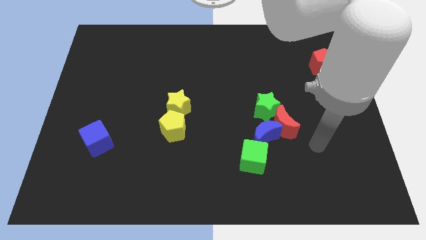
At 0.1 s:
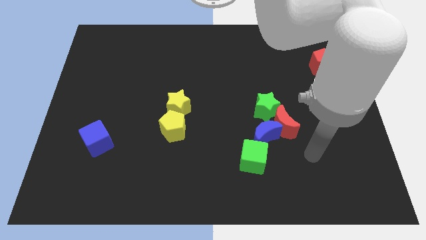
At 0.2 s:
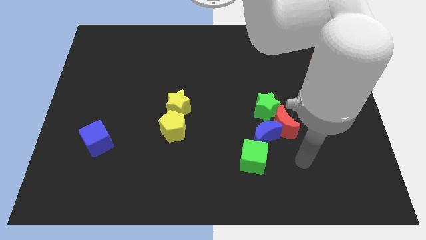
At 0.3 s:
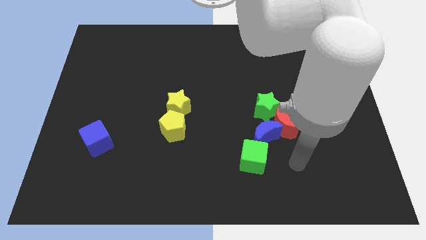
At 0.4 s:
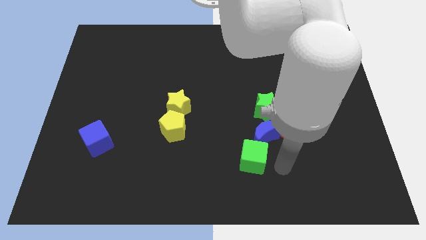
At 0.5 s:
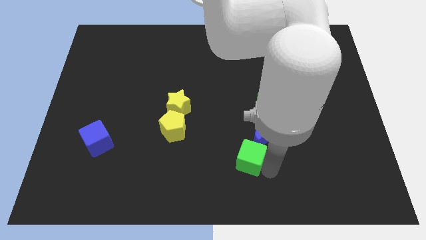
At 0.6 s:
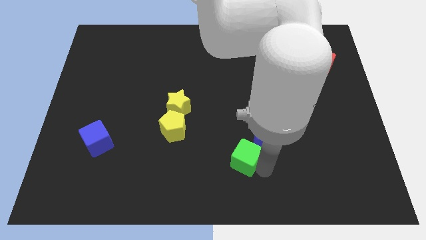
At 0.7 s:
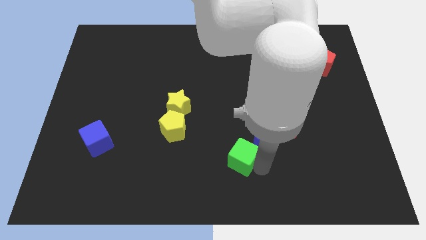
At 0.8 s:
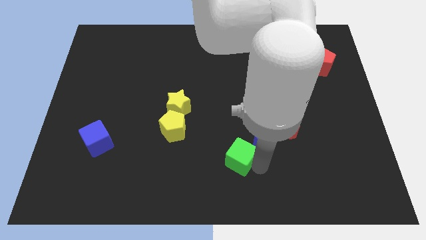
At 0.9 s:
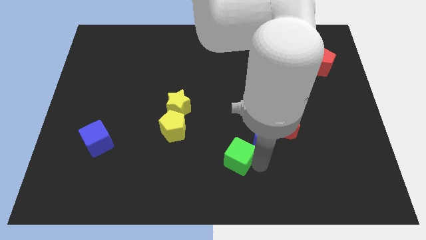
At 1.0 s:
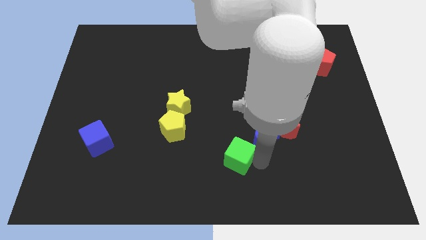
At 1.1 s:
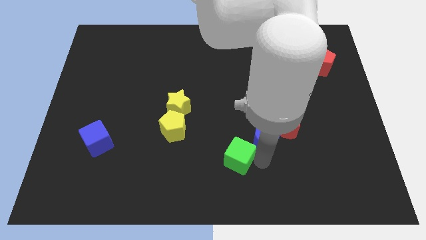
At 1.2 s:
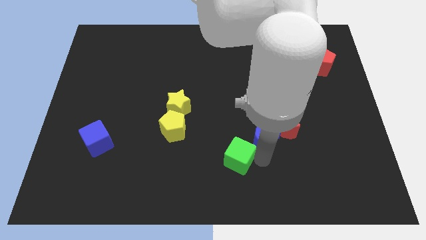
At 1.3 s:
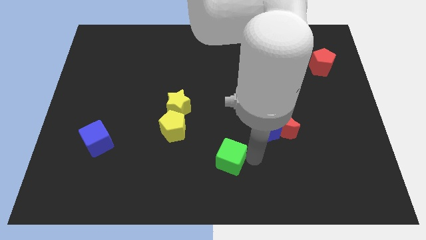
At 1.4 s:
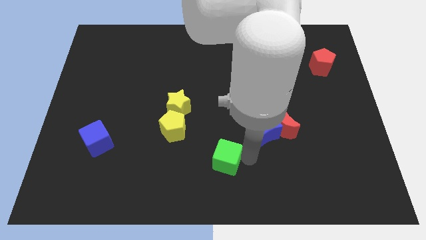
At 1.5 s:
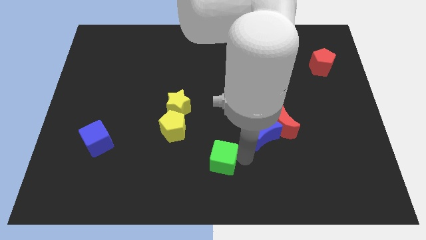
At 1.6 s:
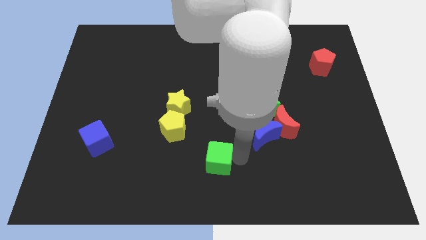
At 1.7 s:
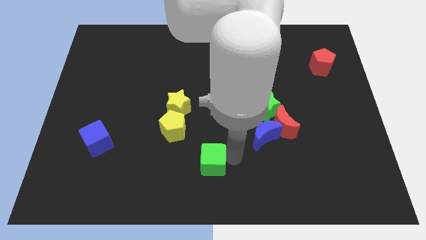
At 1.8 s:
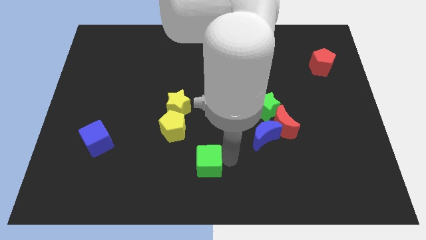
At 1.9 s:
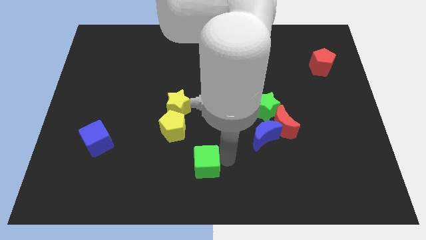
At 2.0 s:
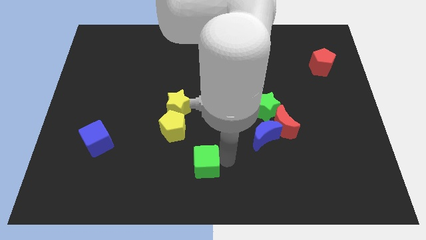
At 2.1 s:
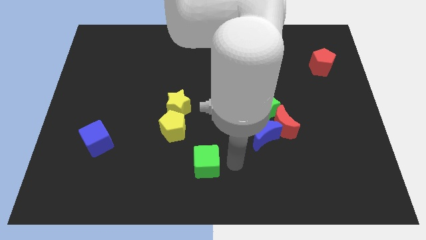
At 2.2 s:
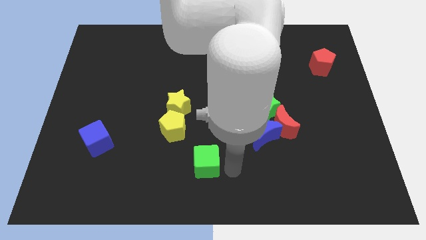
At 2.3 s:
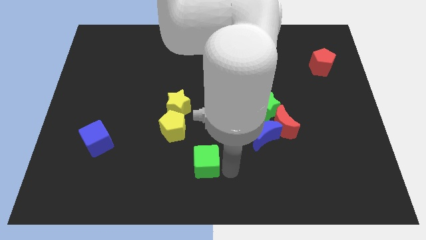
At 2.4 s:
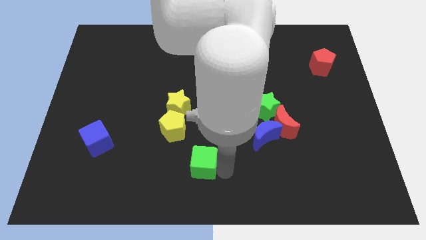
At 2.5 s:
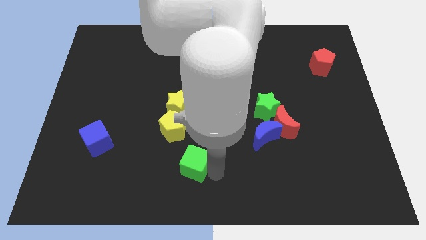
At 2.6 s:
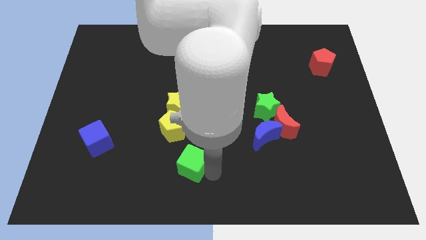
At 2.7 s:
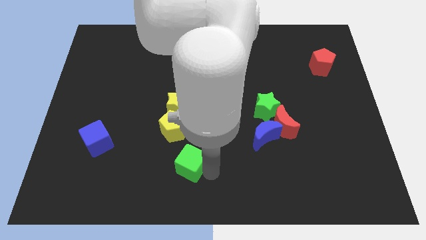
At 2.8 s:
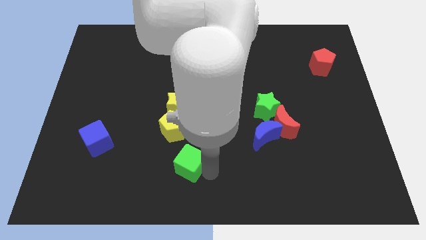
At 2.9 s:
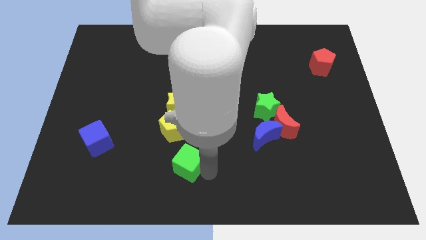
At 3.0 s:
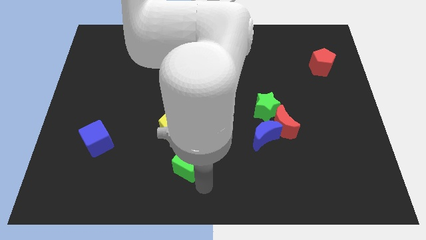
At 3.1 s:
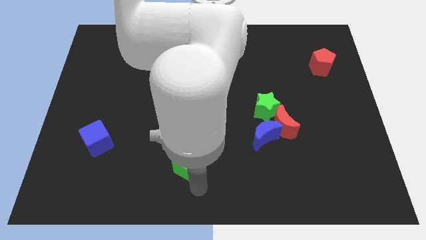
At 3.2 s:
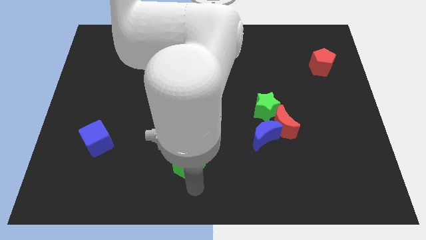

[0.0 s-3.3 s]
move the green cube away from the bottom side of the blue crescent

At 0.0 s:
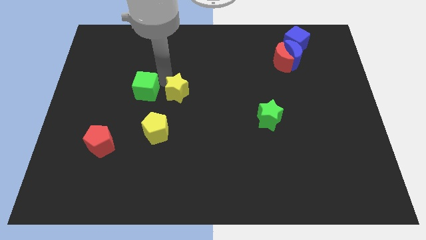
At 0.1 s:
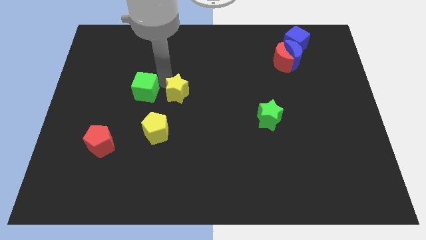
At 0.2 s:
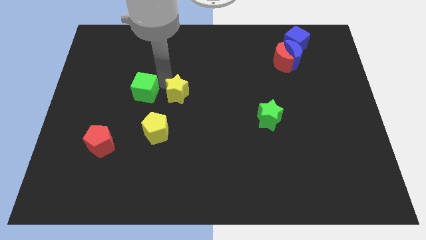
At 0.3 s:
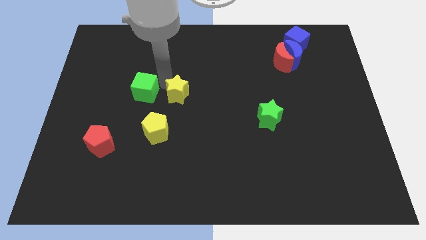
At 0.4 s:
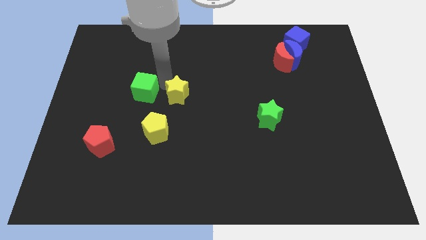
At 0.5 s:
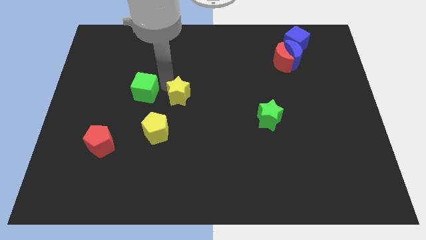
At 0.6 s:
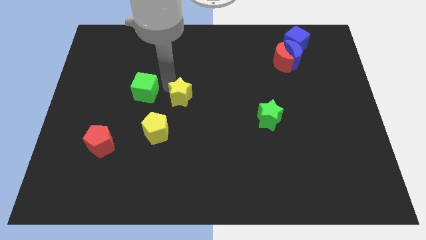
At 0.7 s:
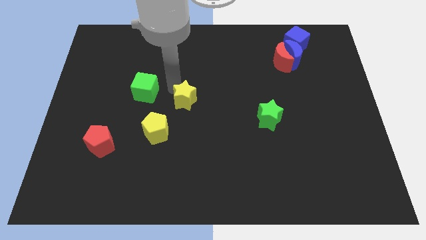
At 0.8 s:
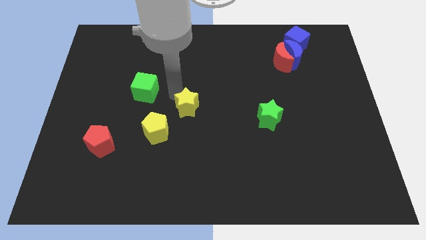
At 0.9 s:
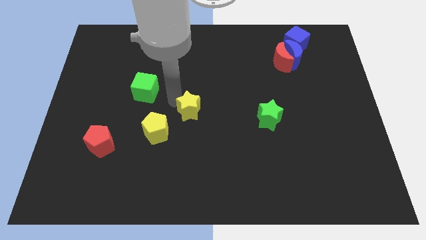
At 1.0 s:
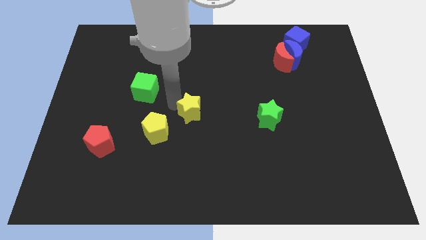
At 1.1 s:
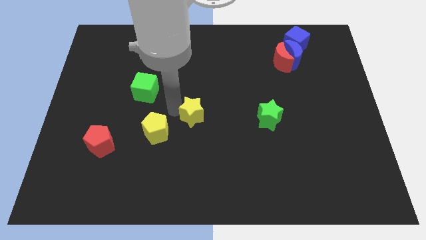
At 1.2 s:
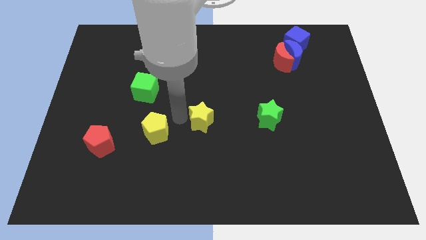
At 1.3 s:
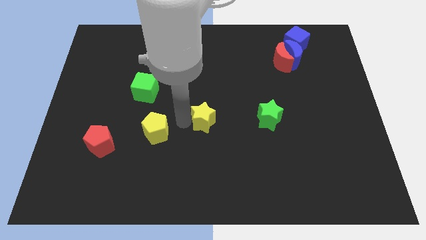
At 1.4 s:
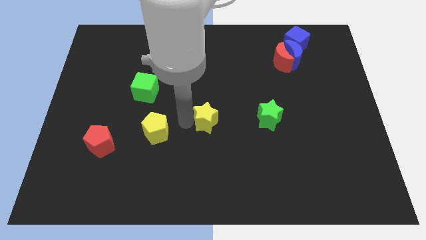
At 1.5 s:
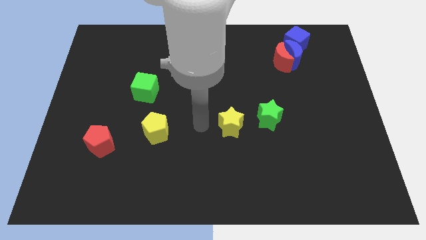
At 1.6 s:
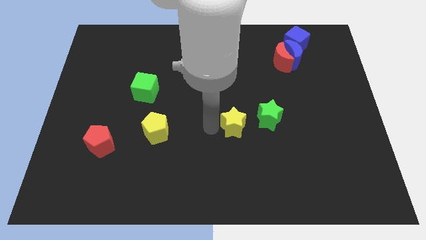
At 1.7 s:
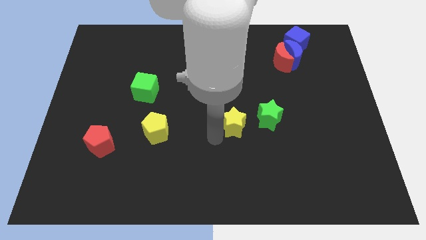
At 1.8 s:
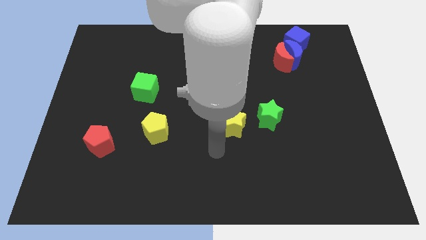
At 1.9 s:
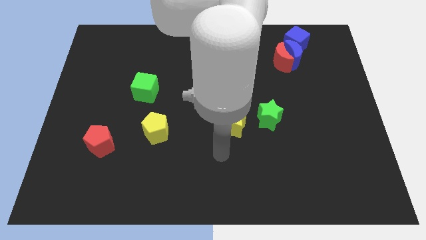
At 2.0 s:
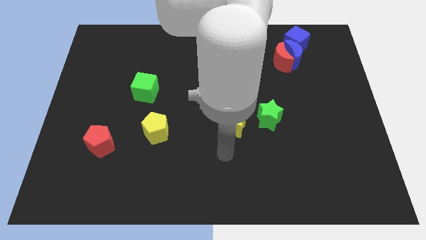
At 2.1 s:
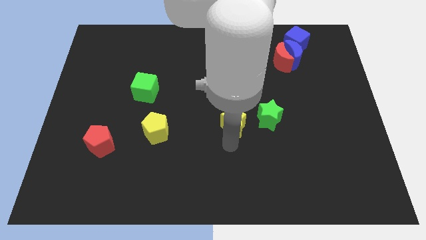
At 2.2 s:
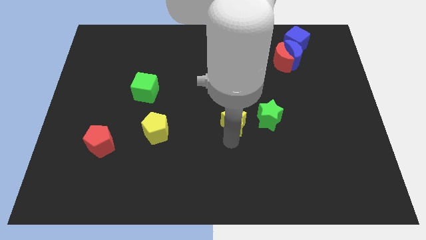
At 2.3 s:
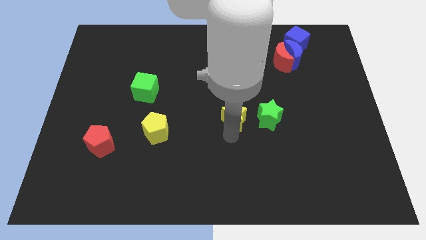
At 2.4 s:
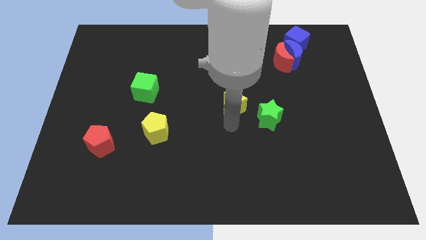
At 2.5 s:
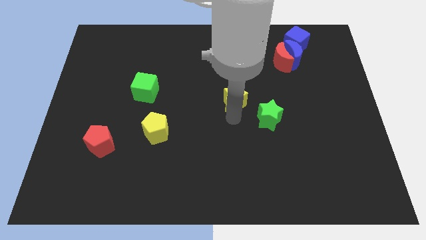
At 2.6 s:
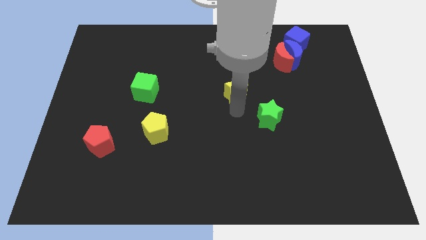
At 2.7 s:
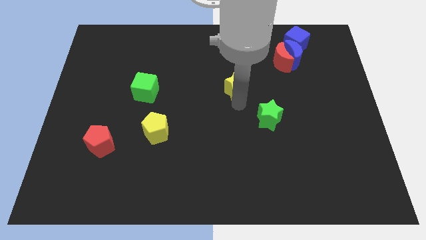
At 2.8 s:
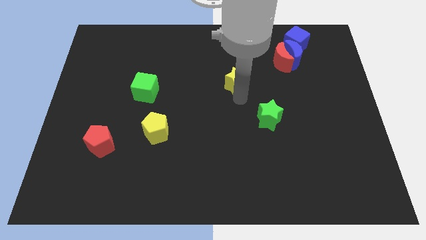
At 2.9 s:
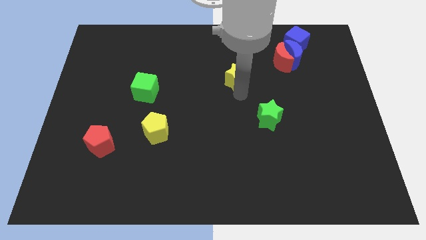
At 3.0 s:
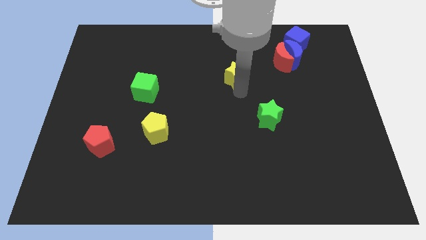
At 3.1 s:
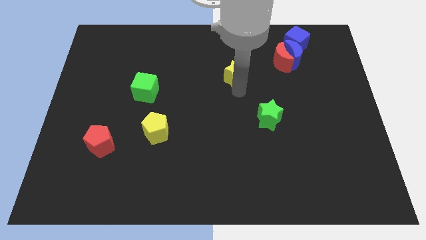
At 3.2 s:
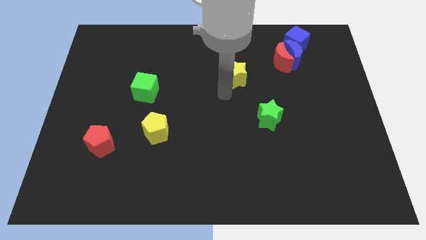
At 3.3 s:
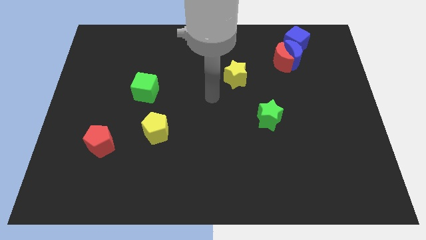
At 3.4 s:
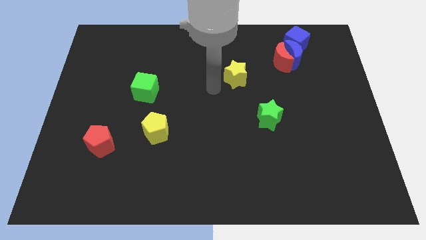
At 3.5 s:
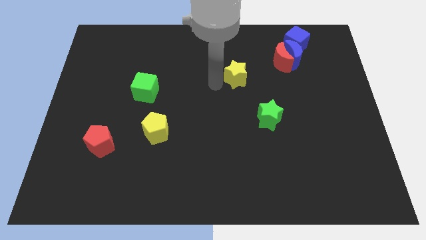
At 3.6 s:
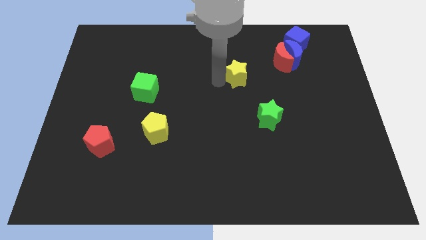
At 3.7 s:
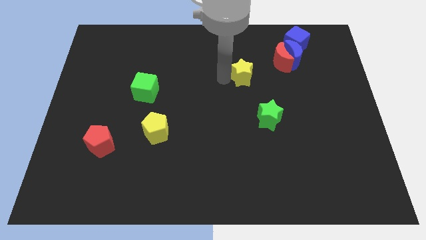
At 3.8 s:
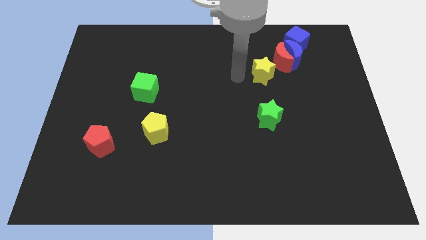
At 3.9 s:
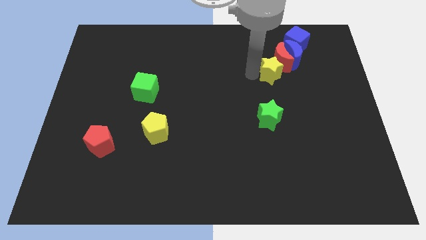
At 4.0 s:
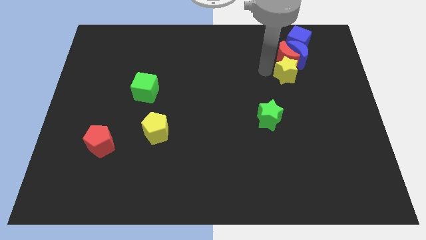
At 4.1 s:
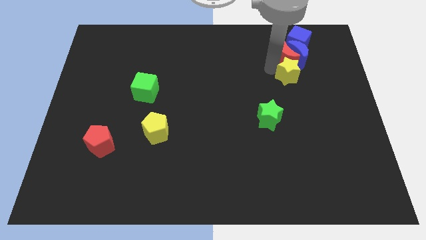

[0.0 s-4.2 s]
place yellow star below red moon

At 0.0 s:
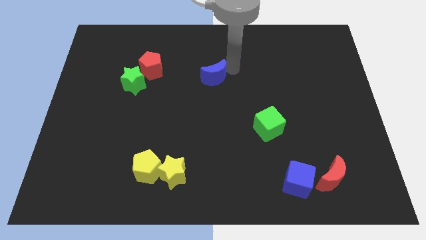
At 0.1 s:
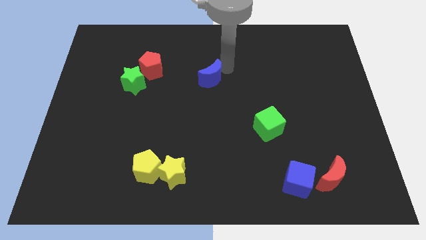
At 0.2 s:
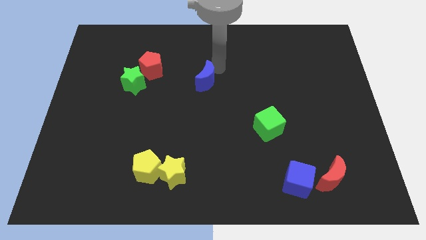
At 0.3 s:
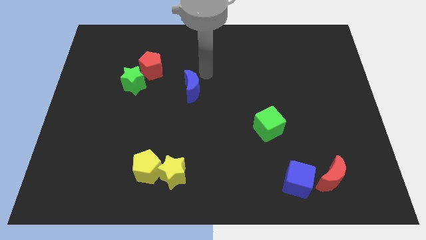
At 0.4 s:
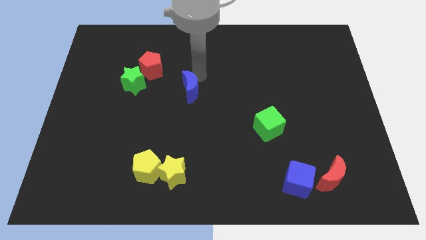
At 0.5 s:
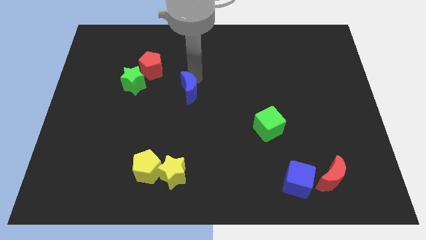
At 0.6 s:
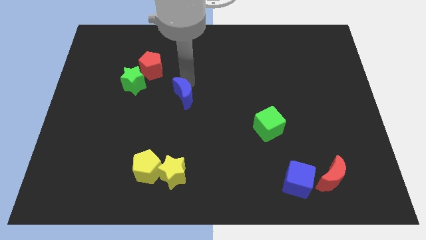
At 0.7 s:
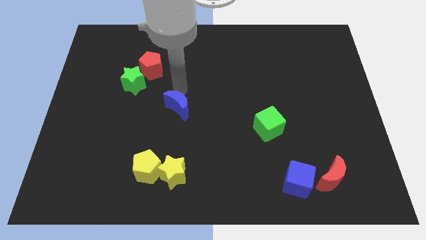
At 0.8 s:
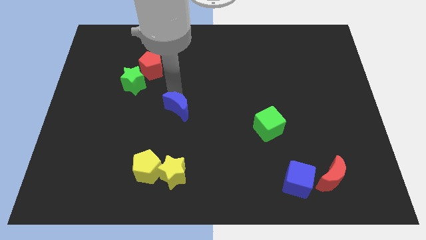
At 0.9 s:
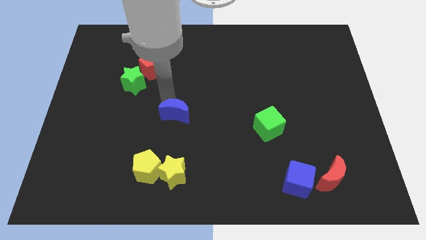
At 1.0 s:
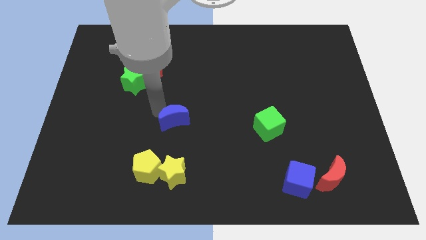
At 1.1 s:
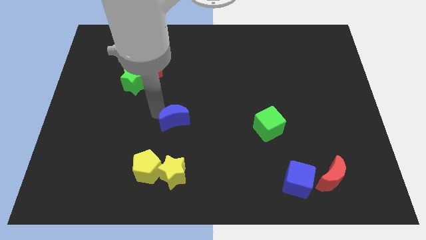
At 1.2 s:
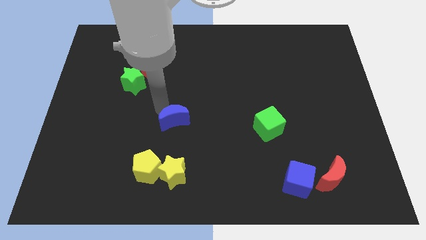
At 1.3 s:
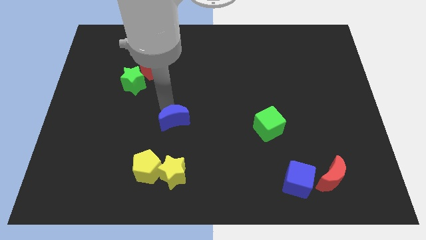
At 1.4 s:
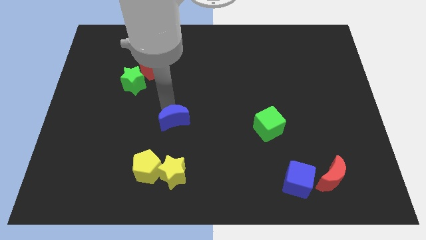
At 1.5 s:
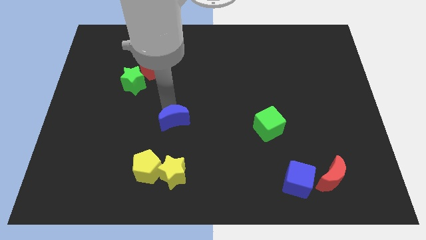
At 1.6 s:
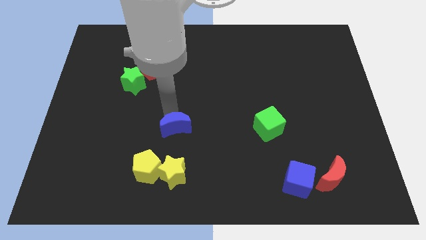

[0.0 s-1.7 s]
push the blue moon above the yellow star
